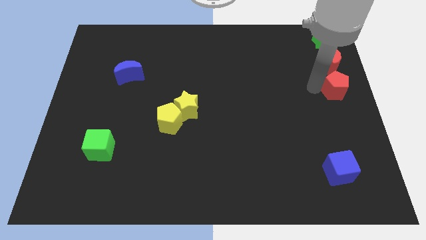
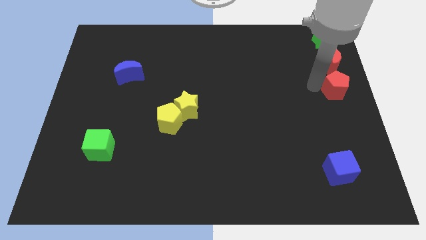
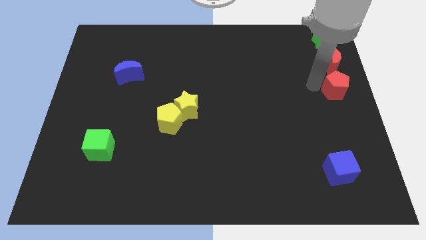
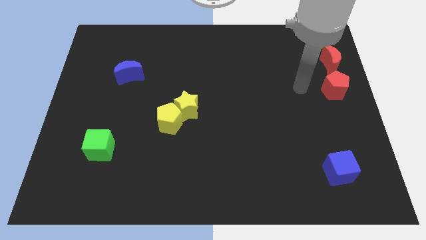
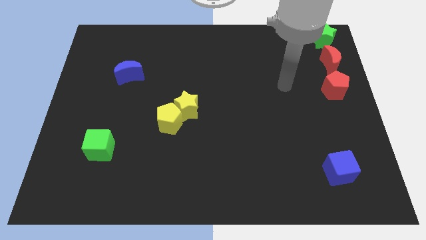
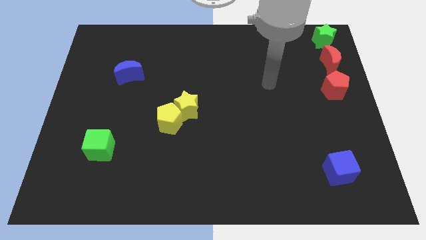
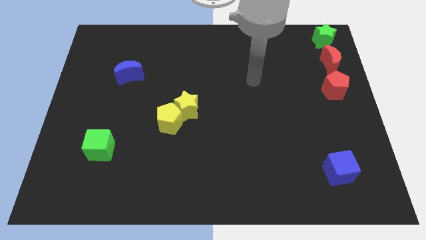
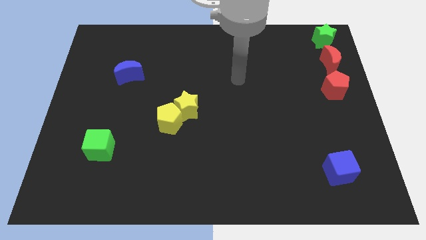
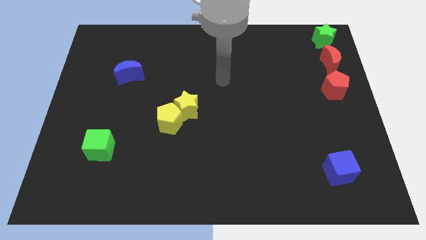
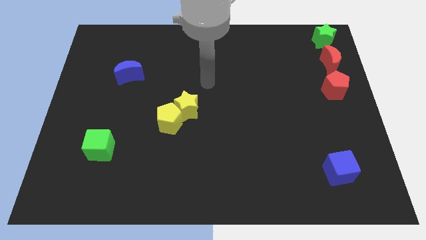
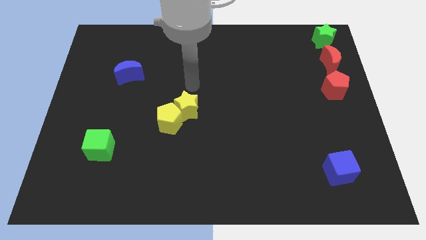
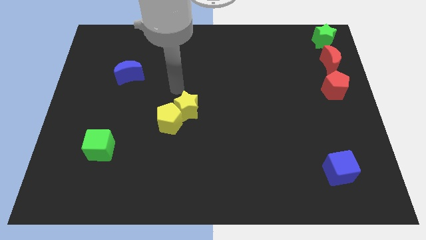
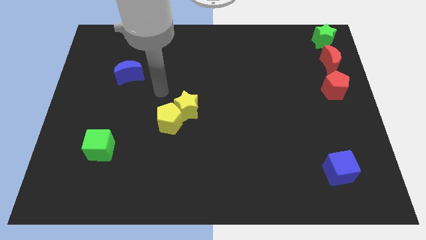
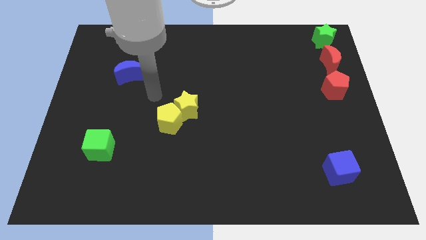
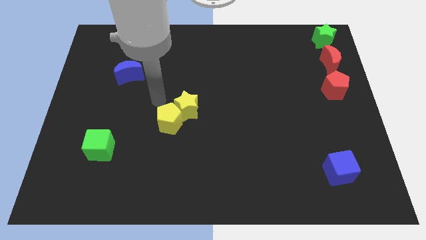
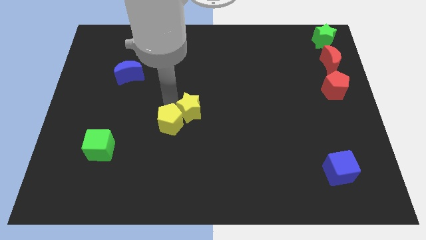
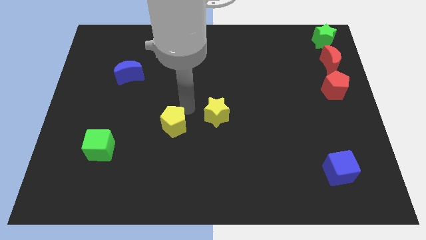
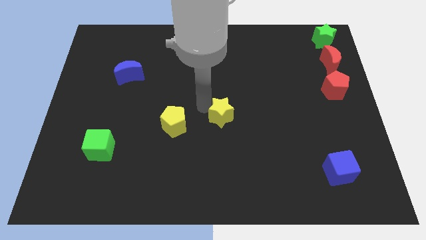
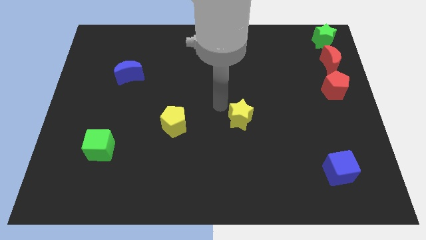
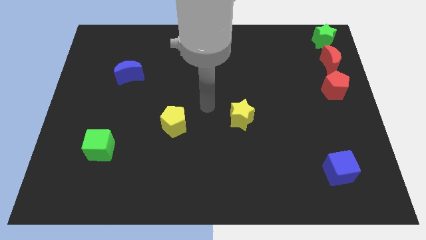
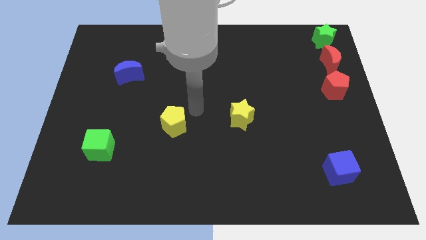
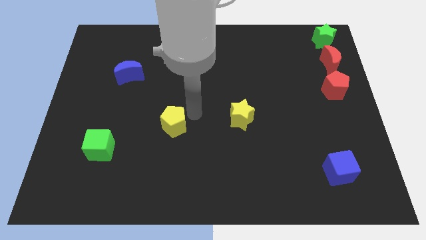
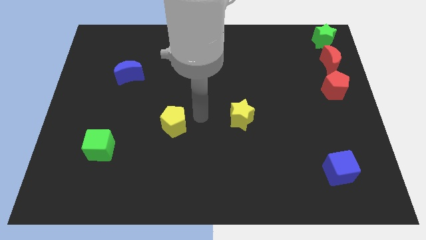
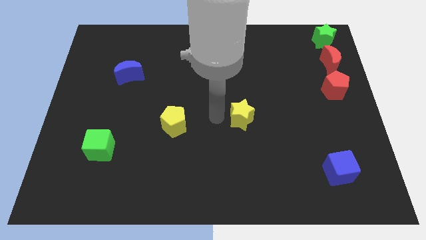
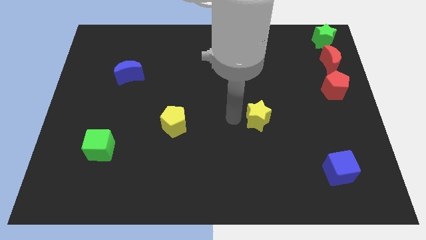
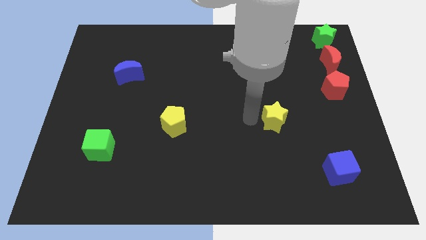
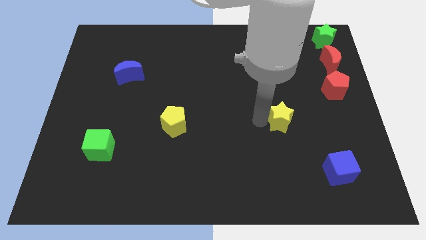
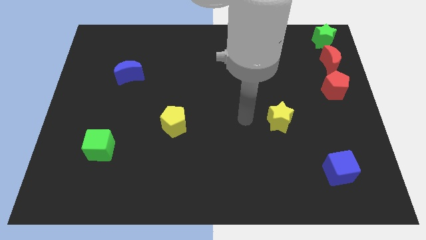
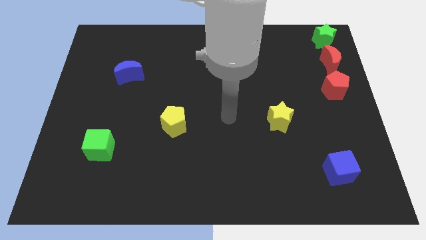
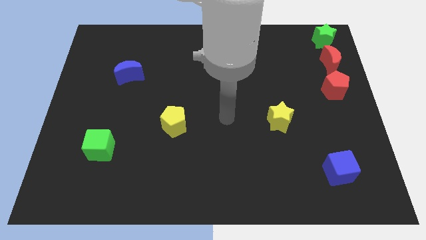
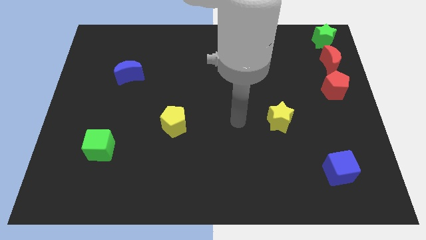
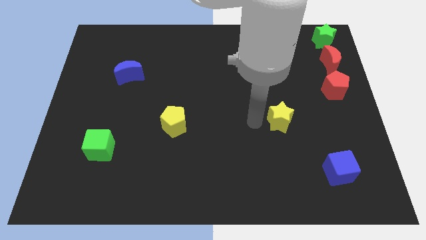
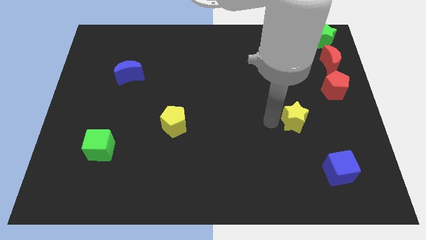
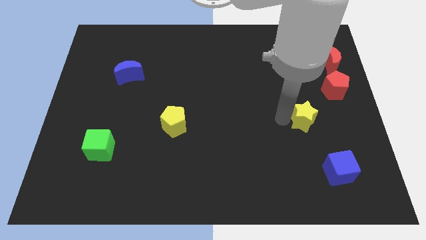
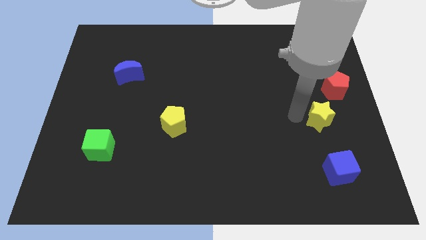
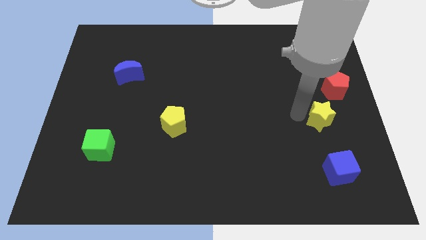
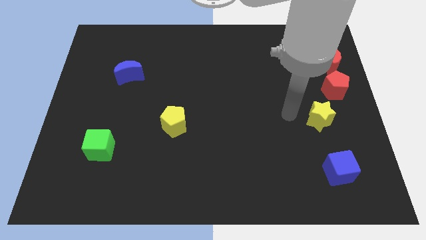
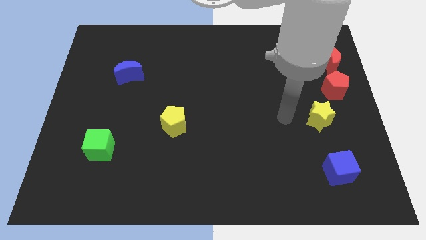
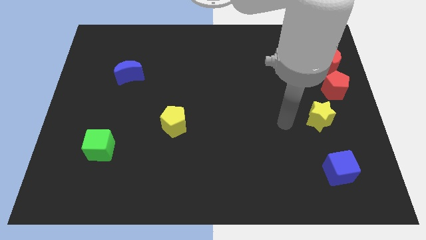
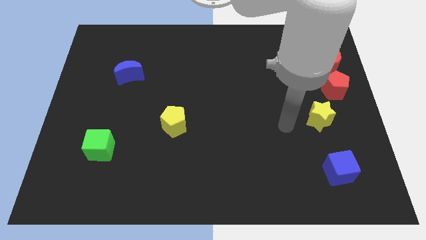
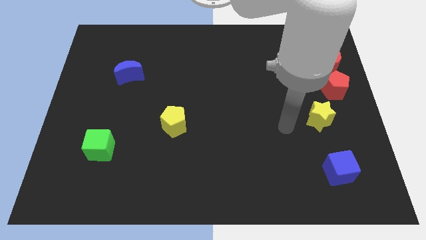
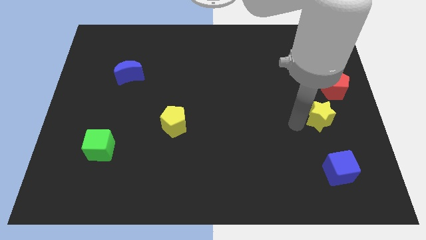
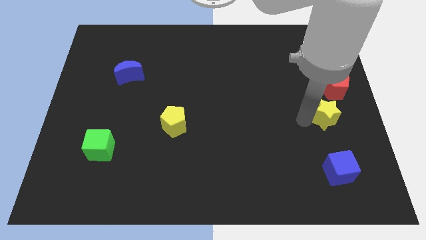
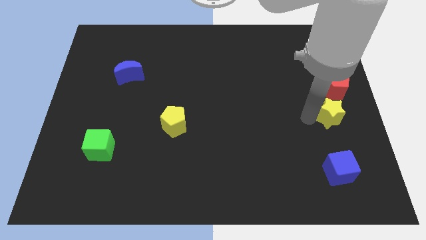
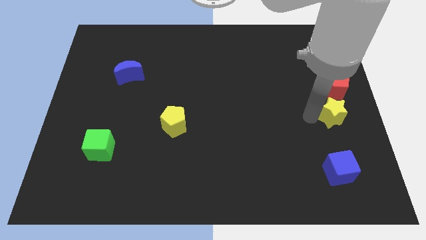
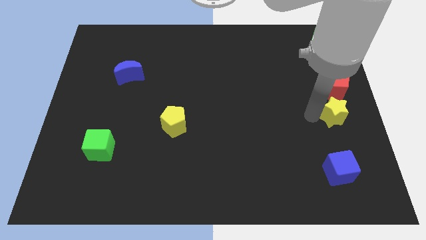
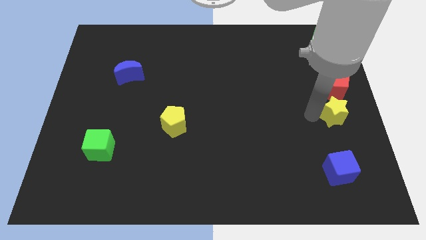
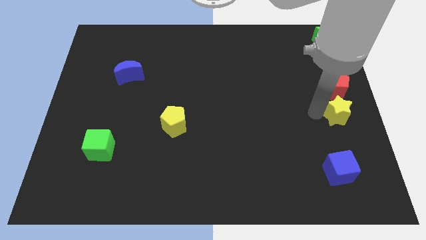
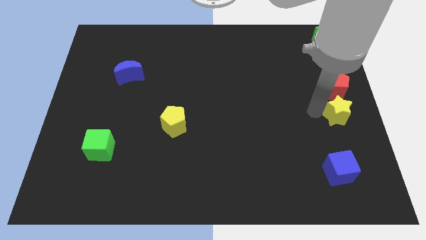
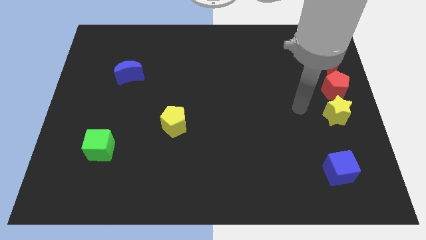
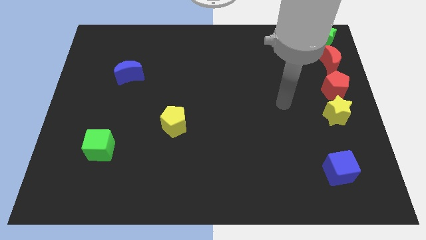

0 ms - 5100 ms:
put the yellow star at the bottom side of the vertical line of blocks

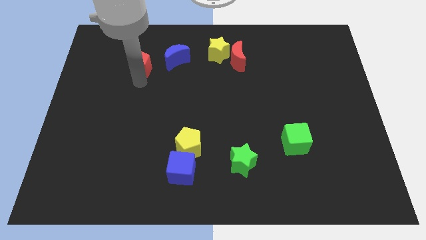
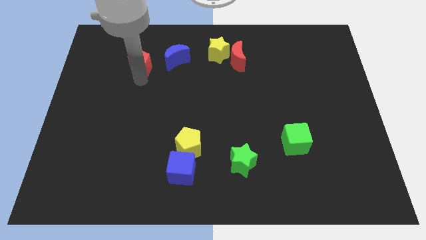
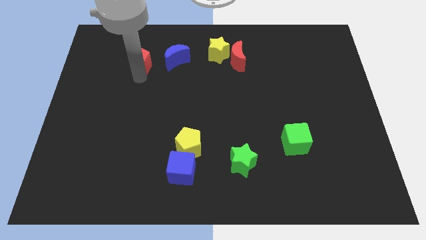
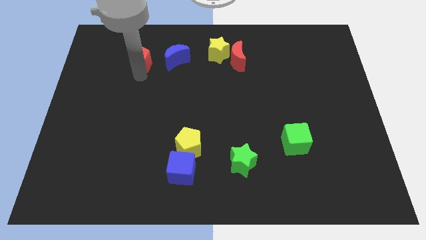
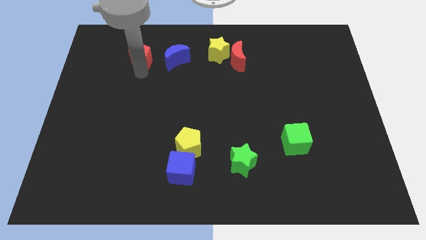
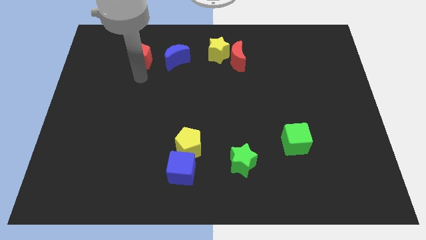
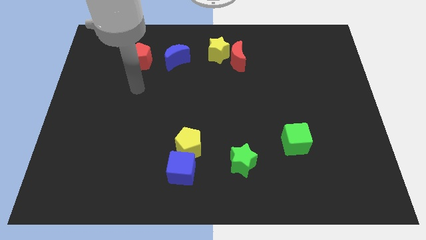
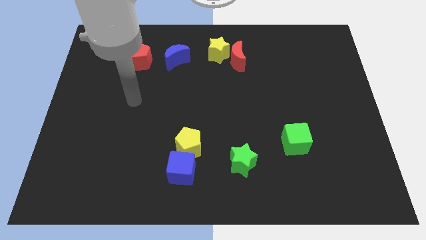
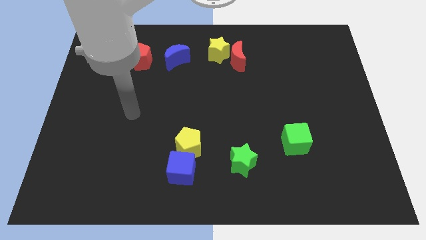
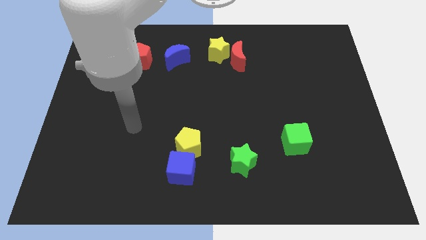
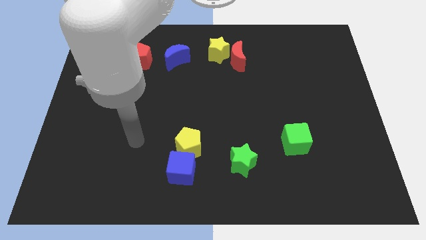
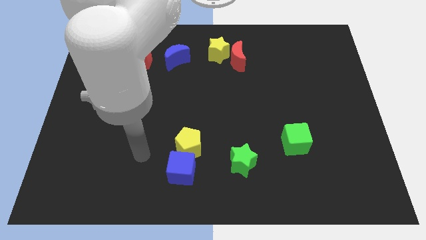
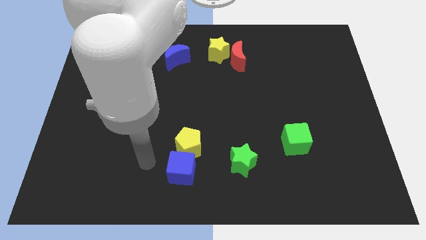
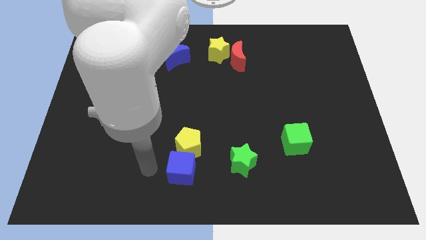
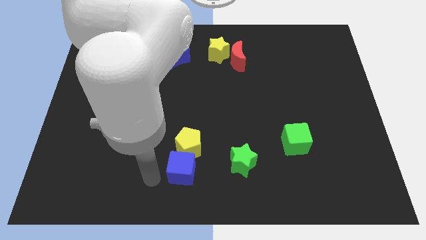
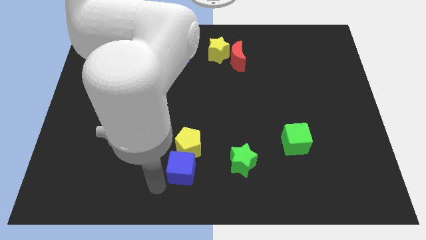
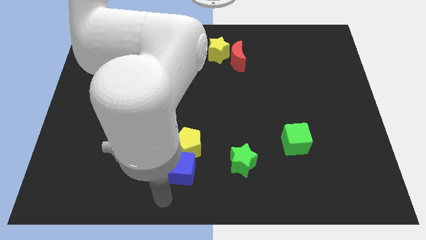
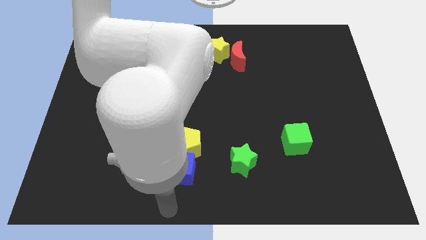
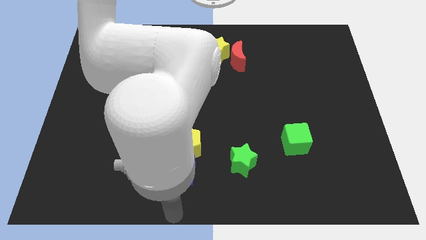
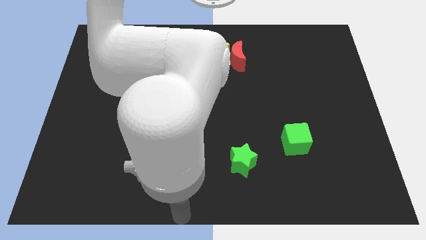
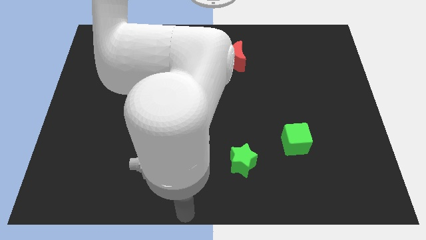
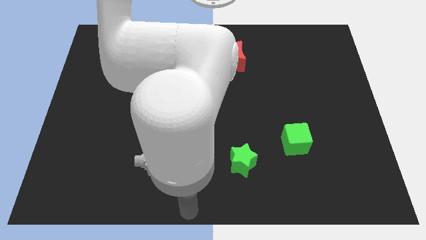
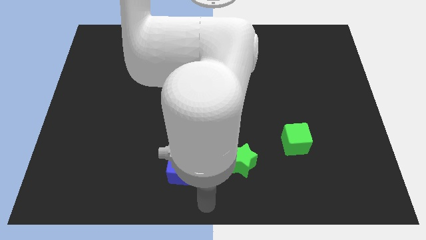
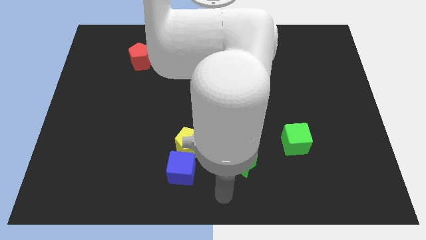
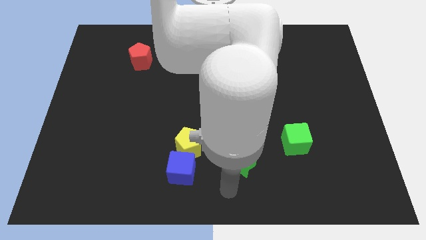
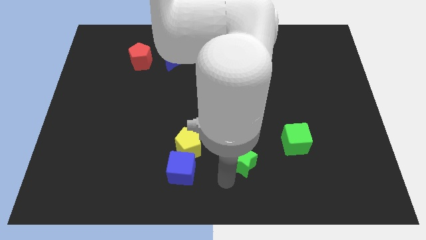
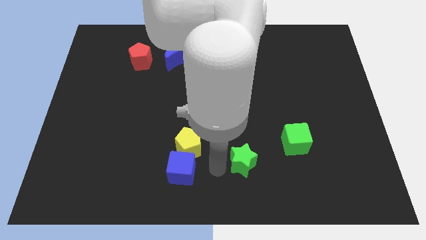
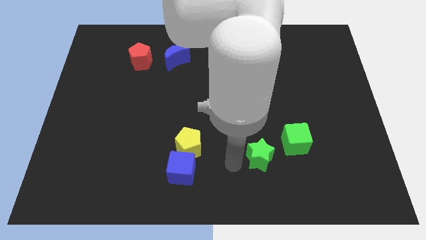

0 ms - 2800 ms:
move your arm to the left of the green star

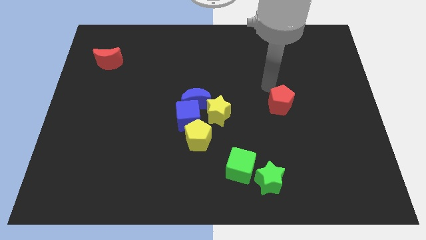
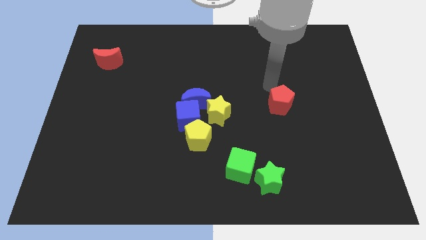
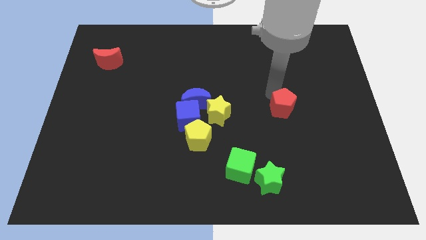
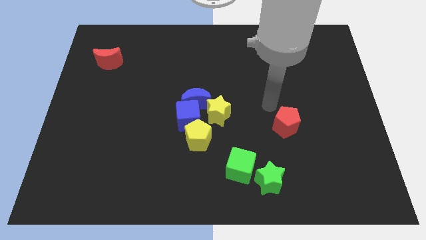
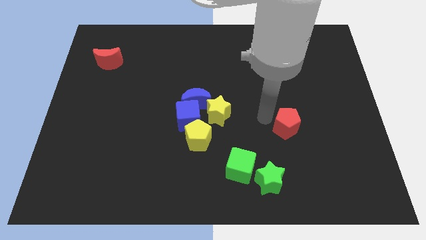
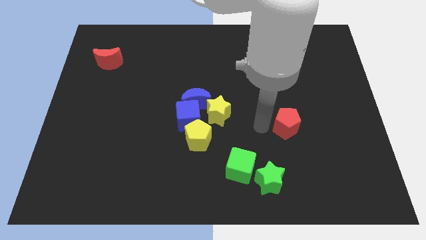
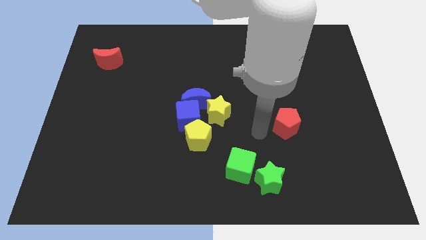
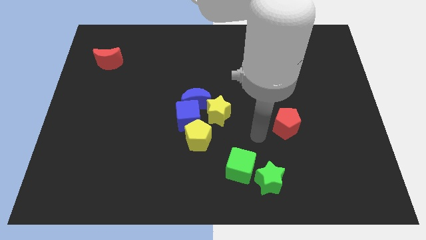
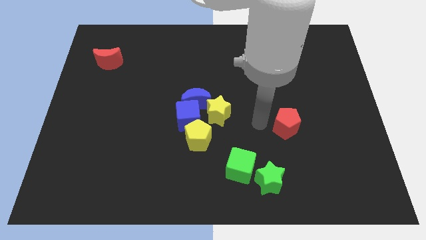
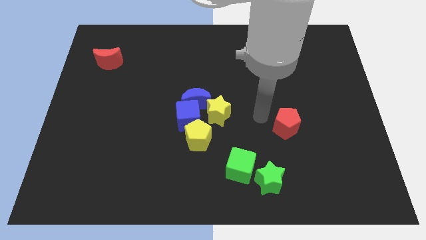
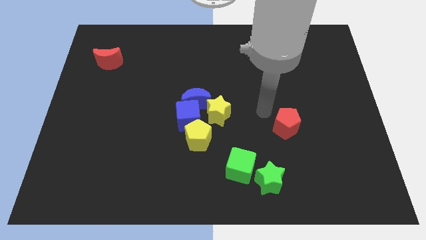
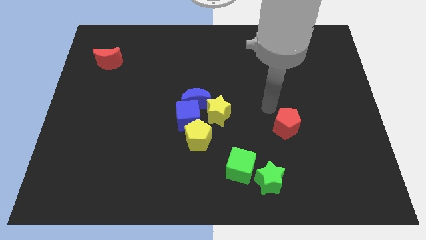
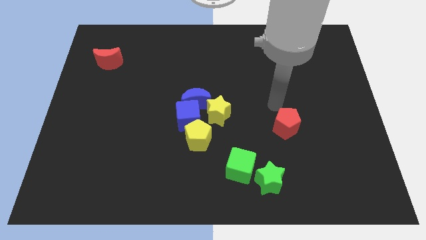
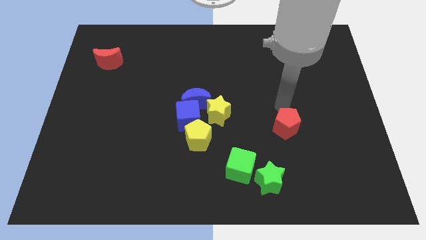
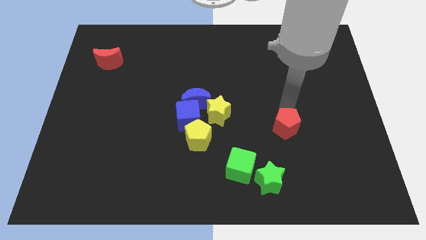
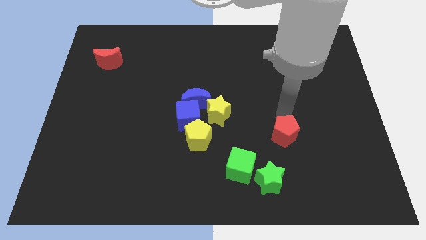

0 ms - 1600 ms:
push the red pentagon parallel to the right of the yellow pentagon
